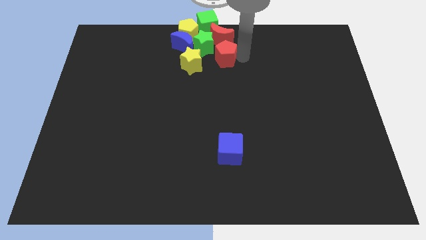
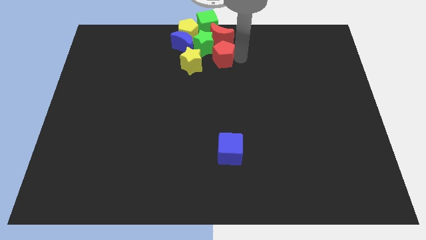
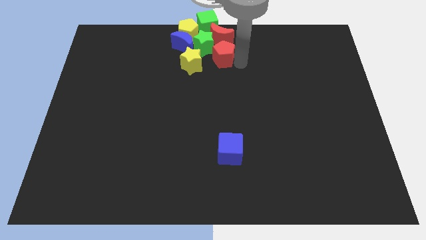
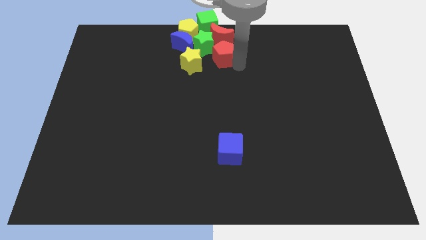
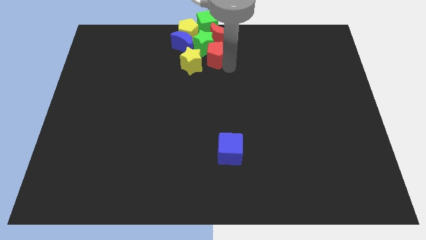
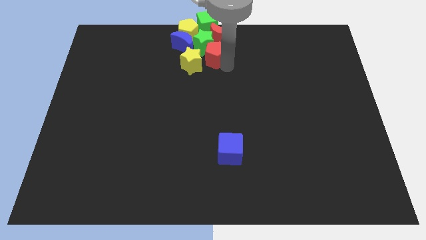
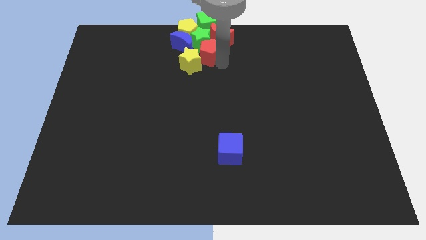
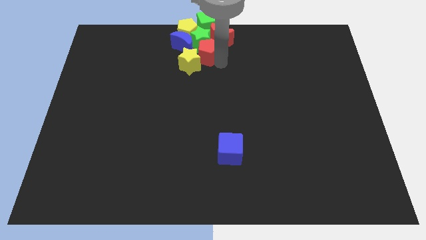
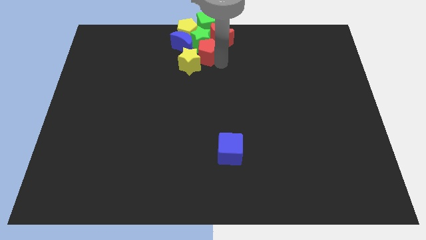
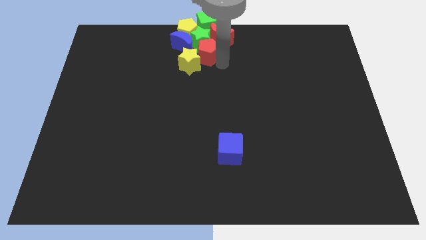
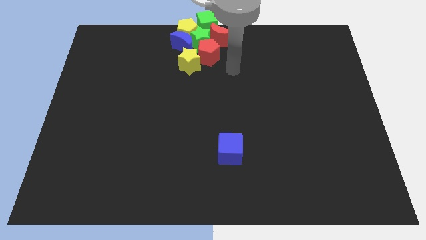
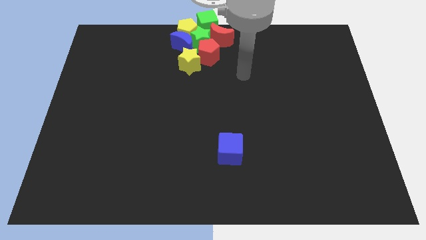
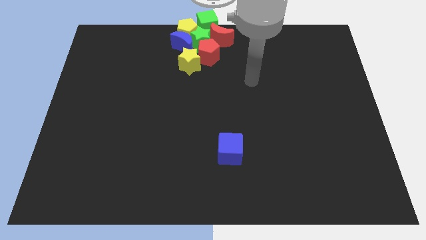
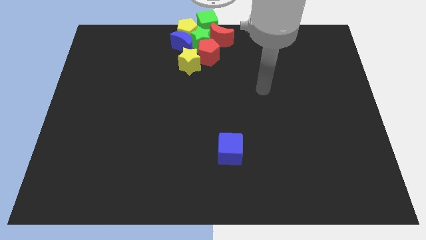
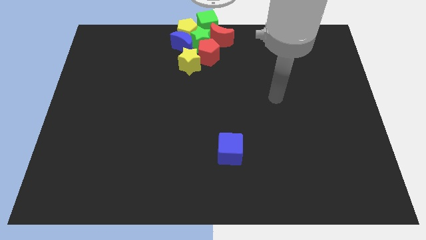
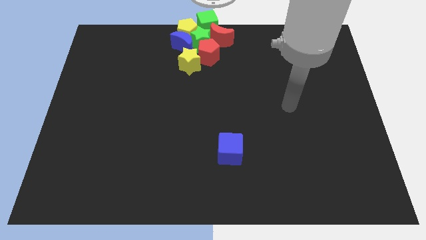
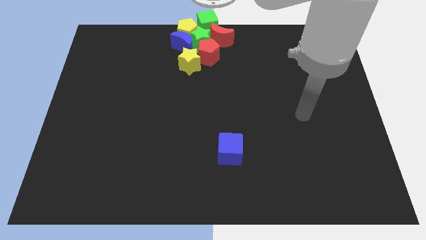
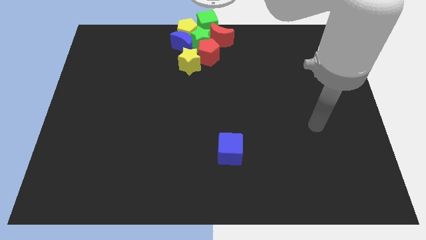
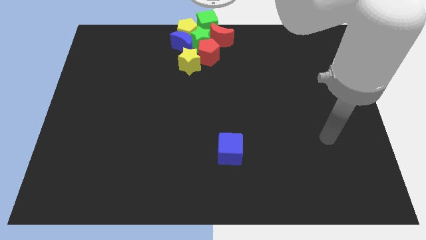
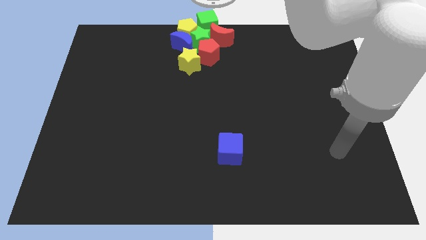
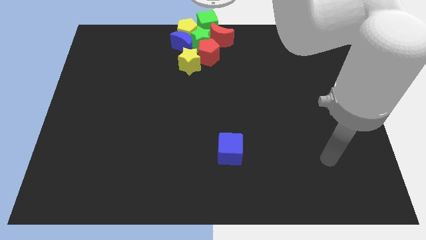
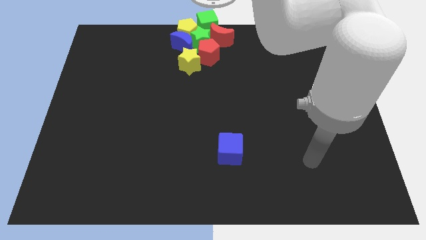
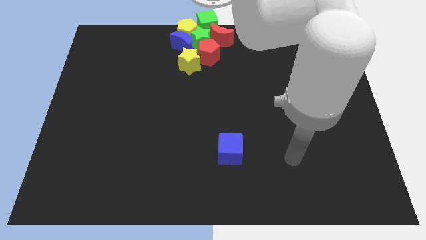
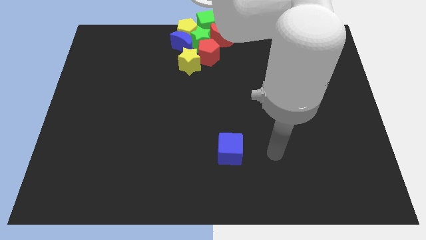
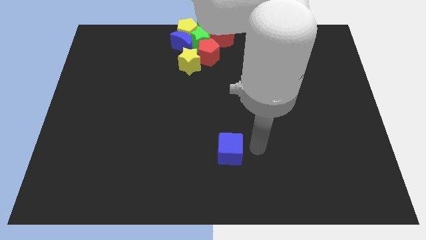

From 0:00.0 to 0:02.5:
place the arm right to the blue cube

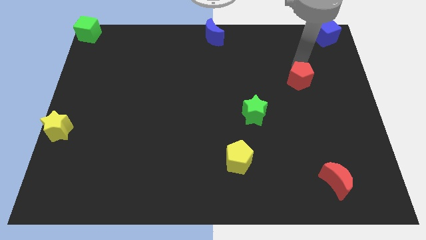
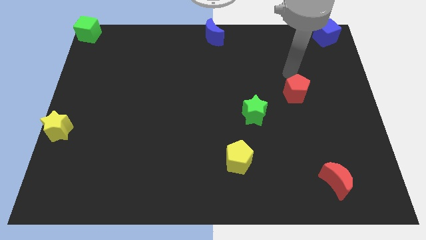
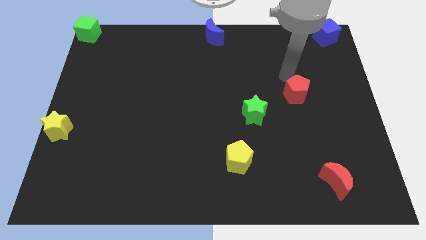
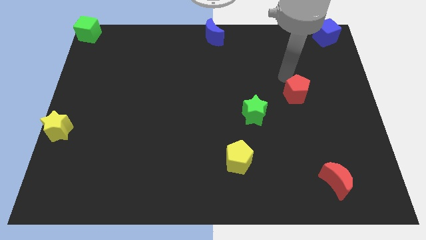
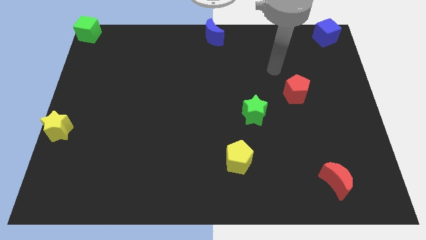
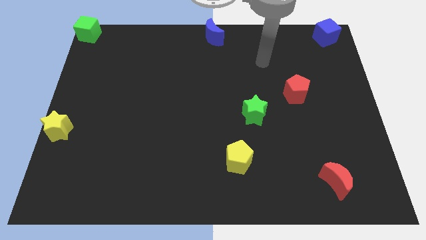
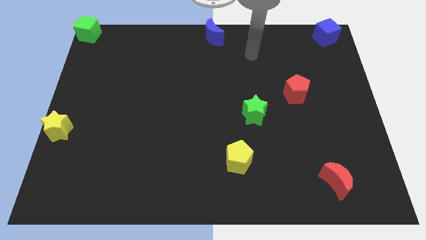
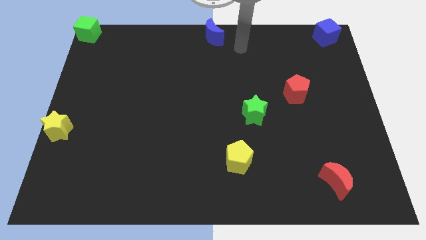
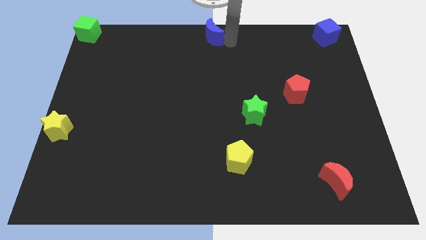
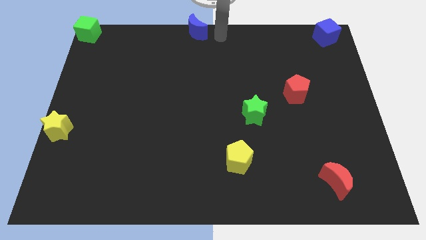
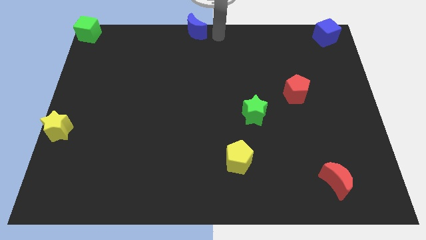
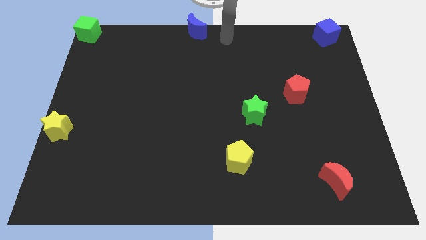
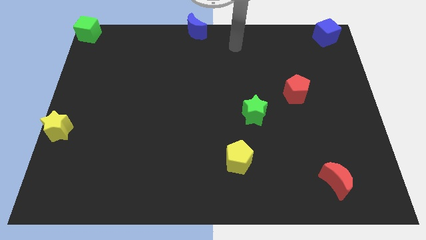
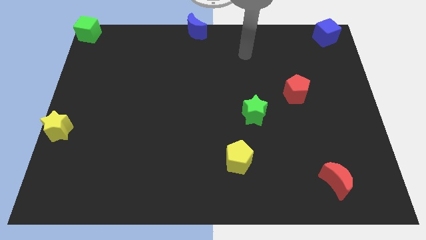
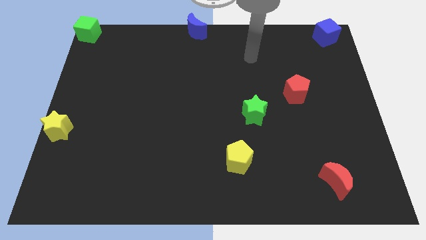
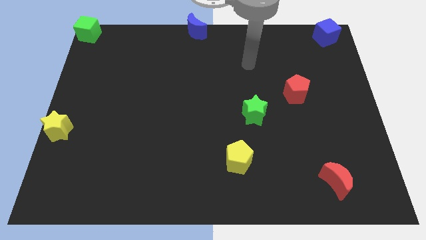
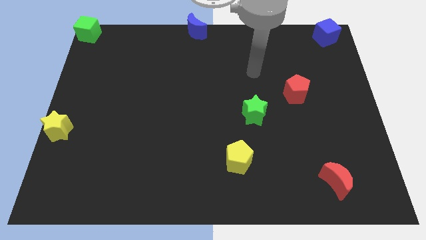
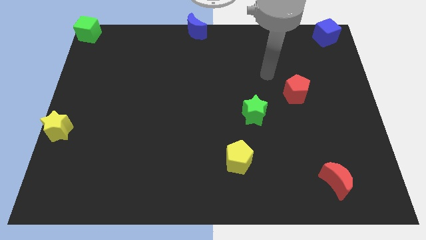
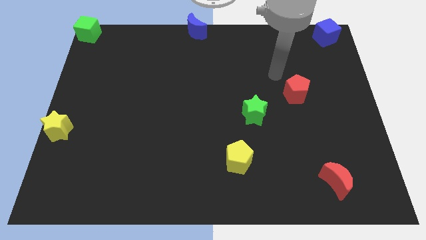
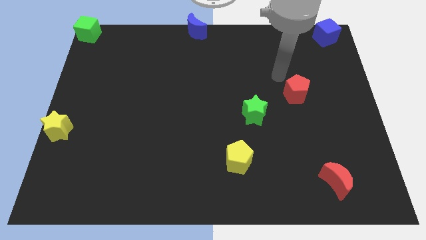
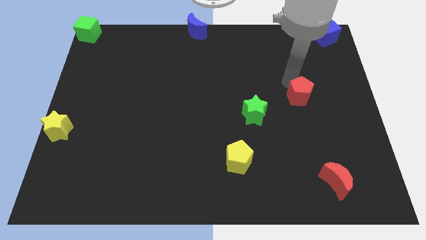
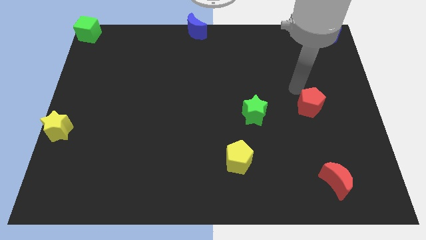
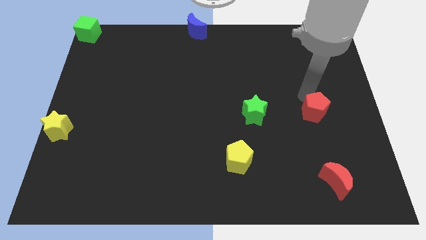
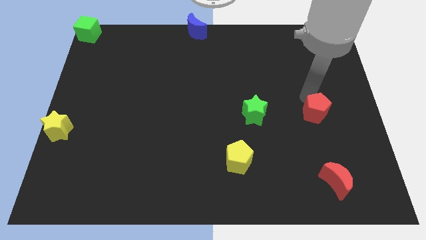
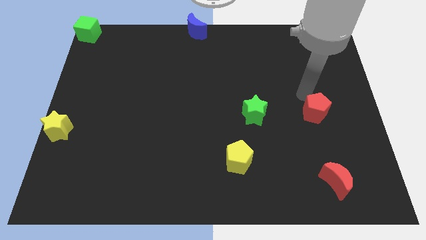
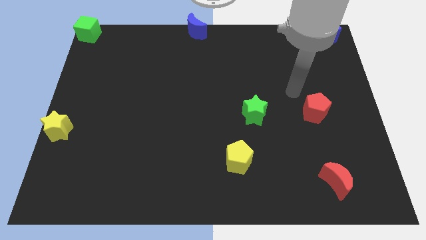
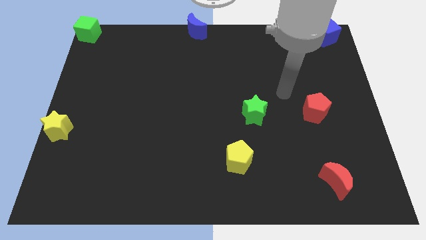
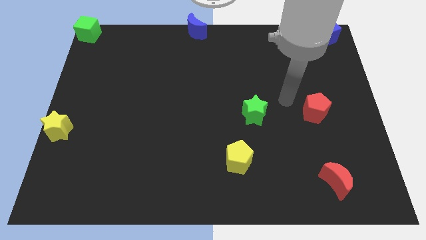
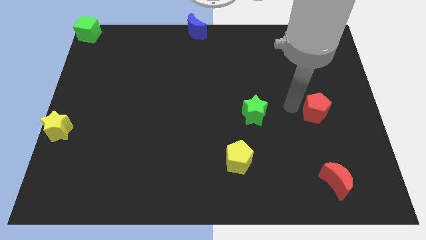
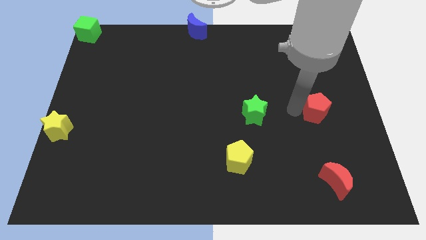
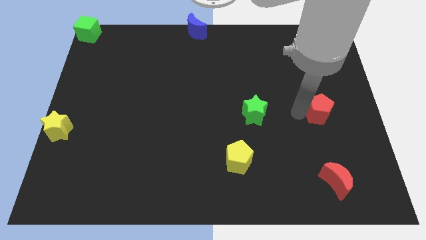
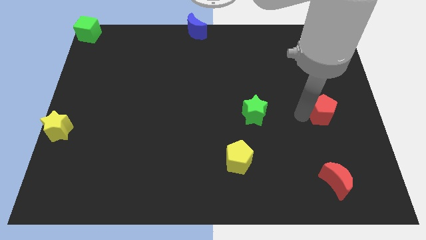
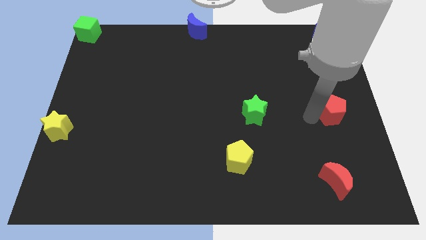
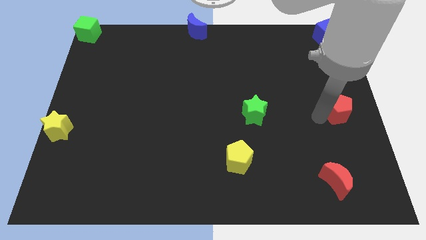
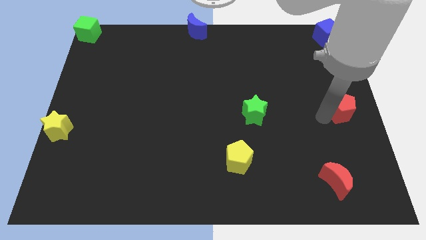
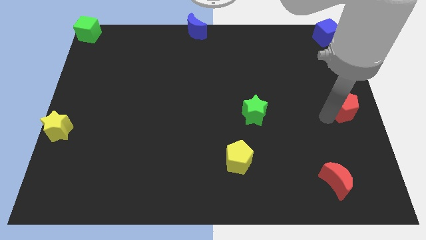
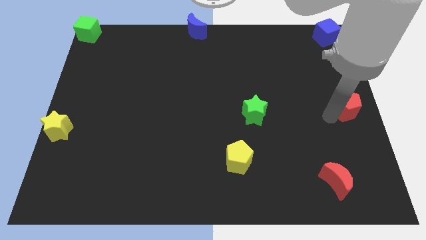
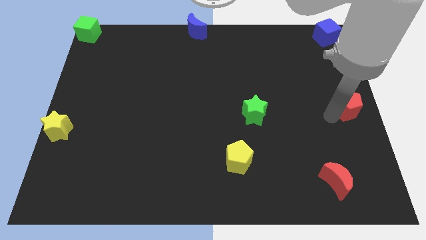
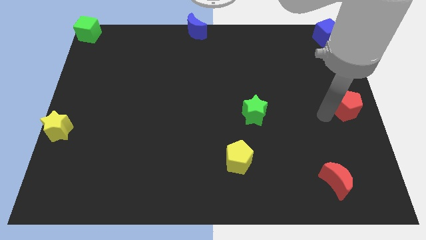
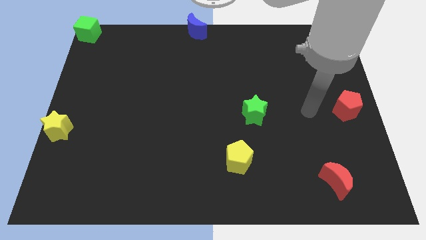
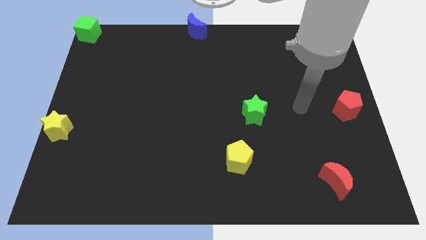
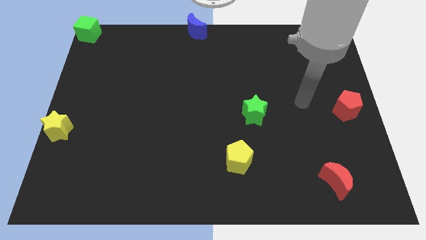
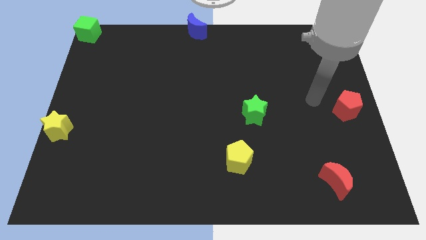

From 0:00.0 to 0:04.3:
place the red pentagon to the right center of the board

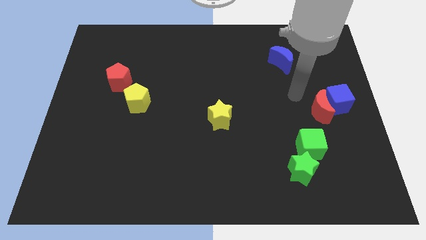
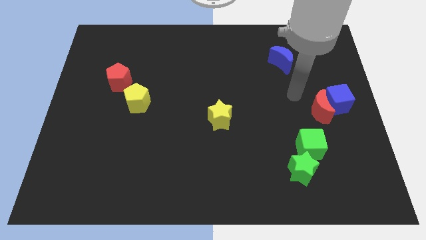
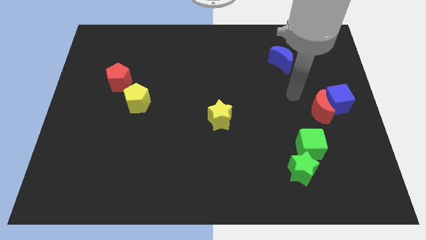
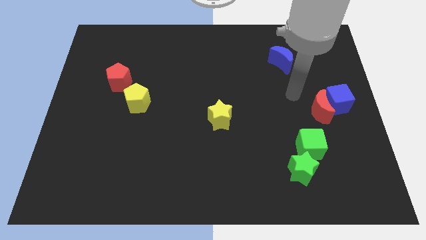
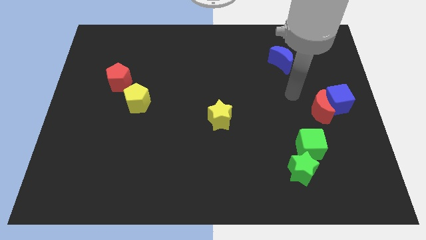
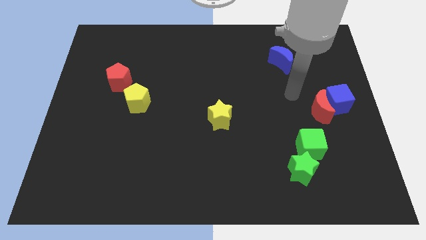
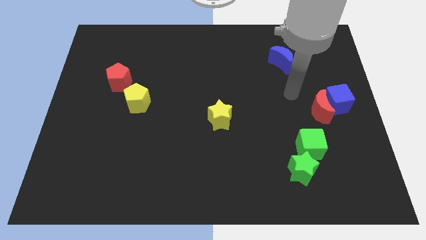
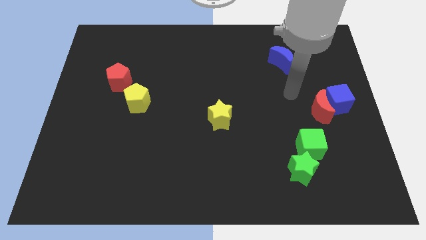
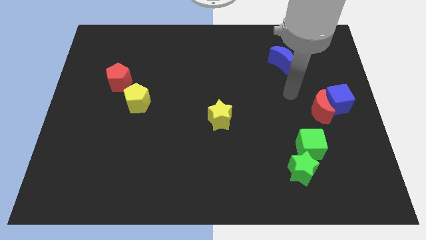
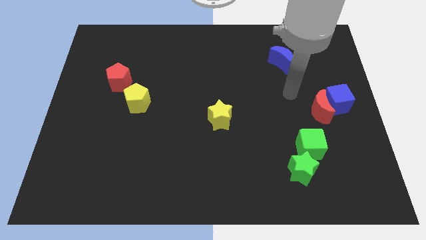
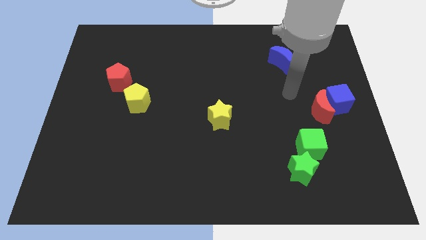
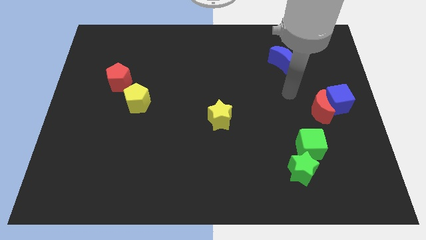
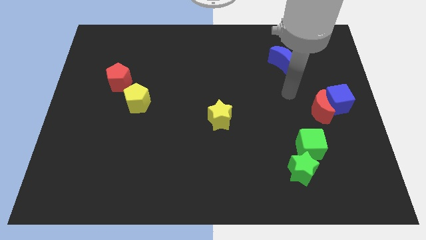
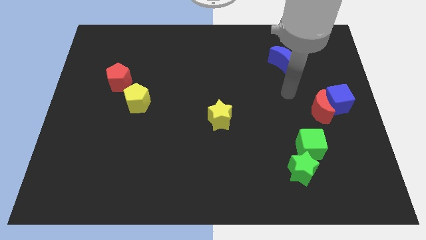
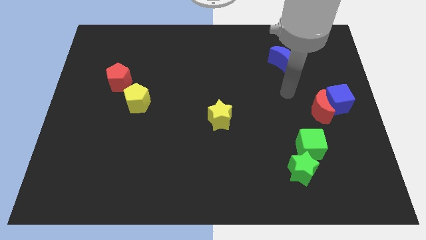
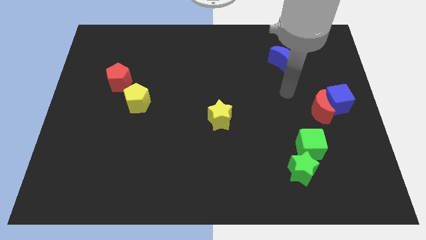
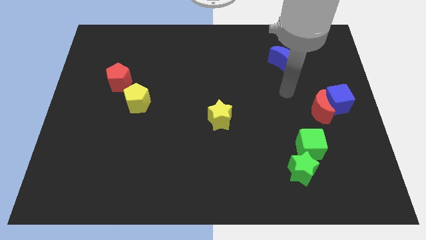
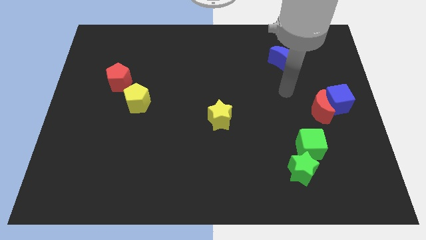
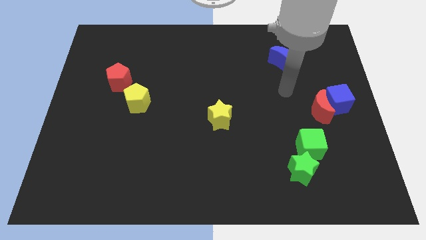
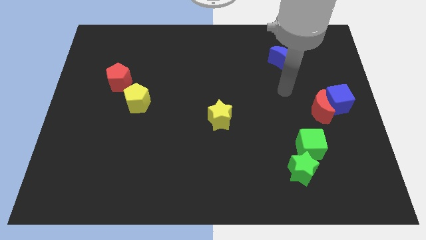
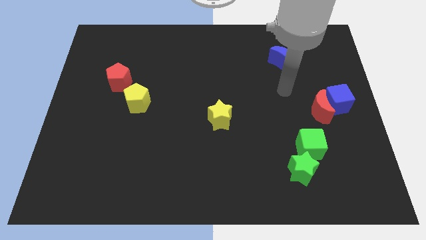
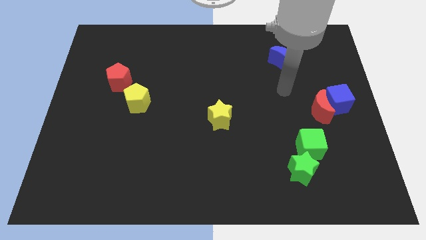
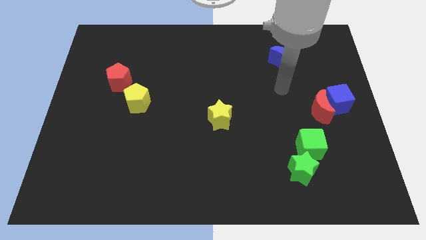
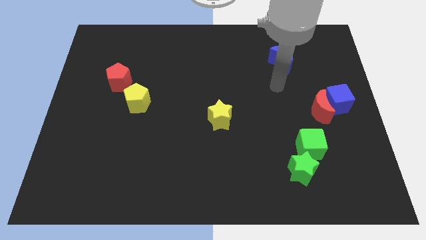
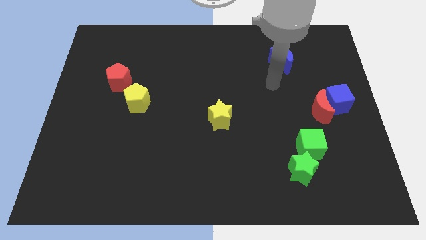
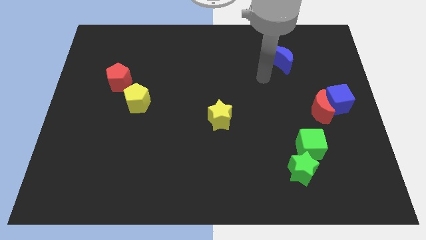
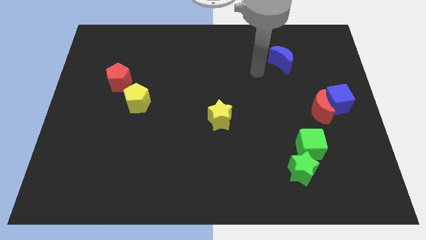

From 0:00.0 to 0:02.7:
move the arm towards the blue crescent
